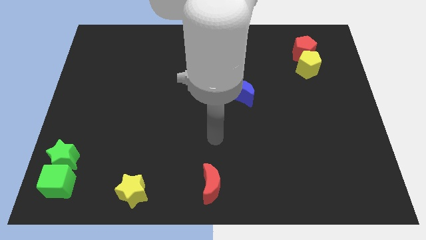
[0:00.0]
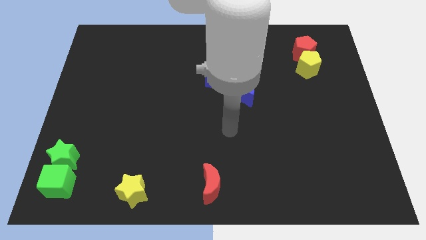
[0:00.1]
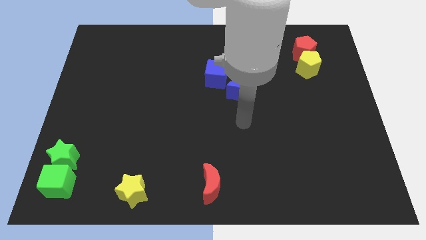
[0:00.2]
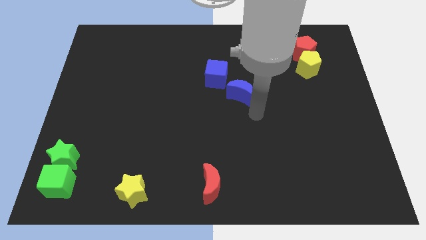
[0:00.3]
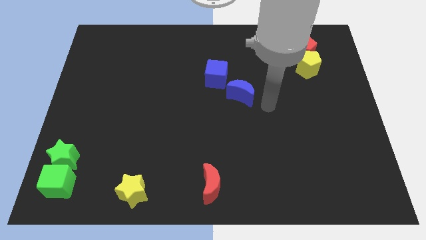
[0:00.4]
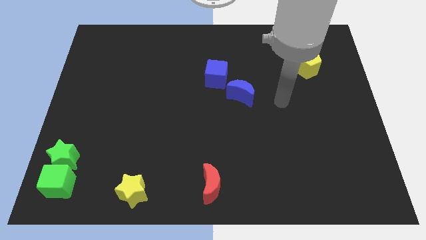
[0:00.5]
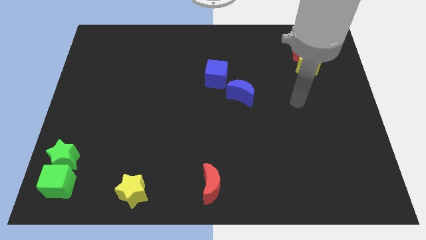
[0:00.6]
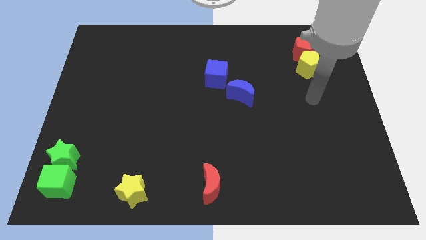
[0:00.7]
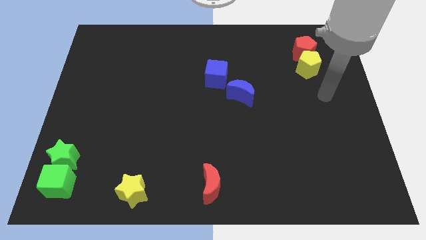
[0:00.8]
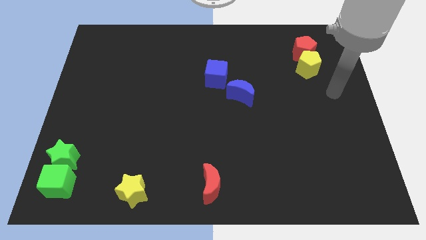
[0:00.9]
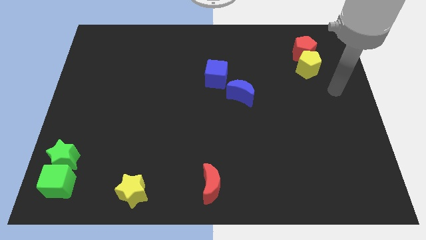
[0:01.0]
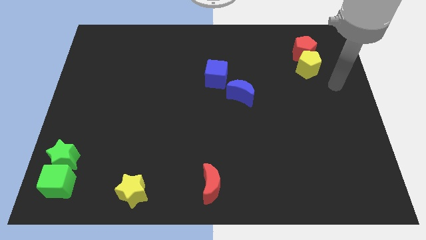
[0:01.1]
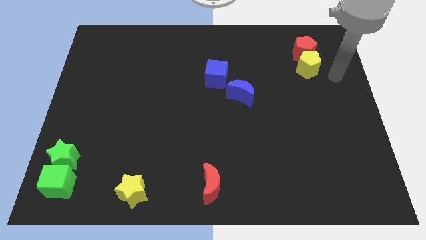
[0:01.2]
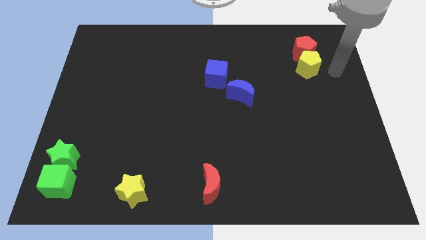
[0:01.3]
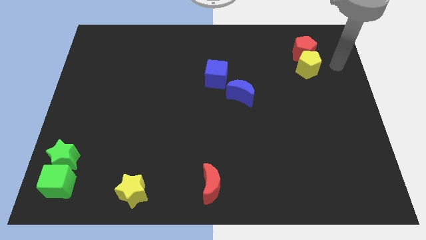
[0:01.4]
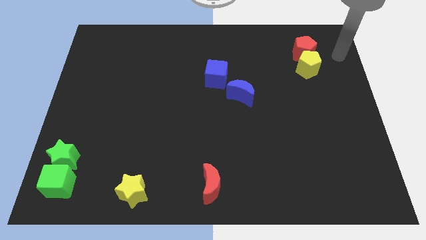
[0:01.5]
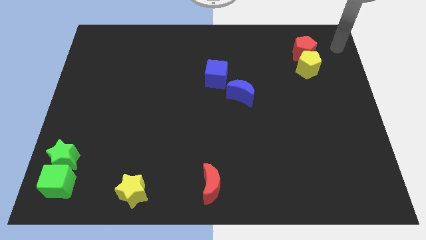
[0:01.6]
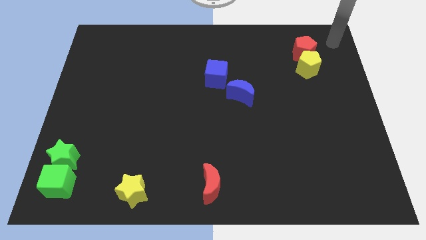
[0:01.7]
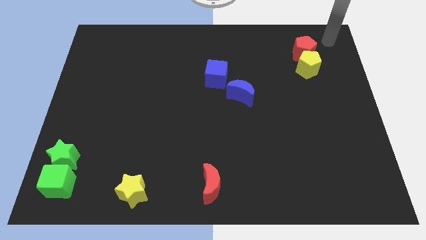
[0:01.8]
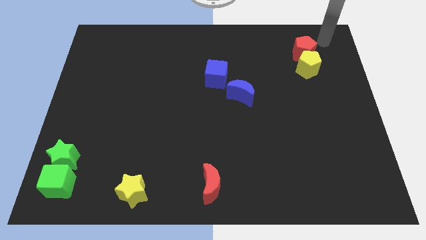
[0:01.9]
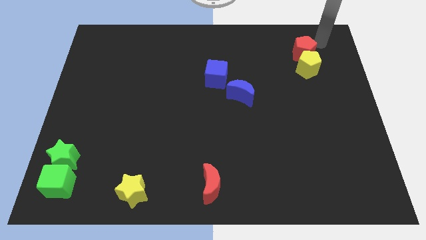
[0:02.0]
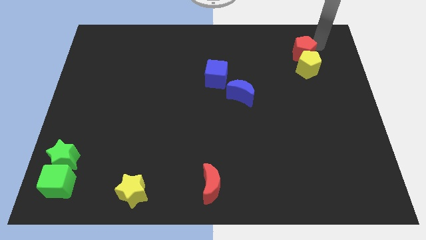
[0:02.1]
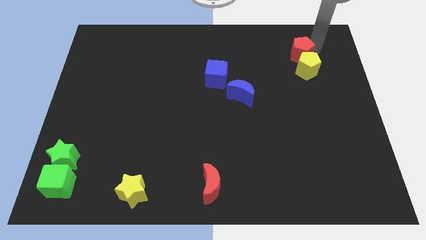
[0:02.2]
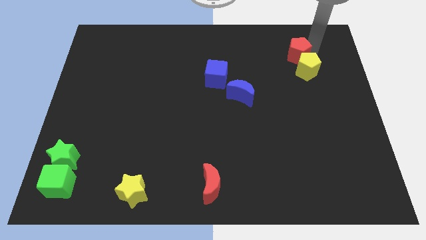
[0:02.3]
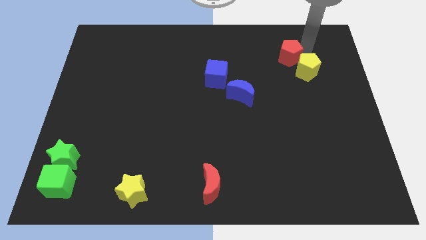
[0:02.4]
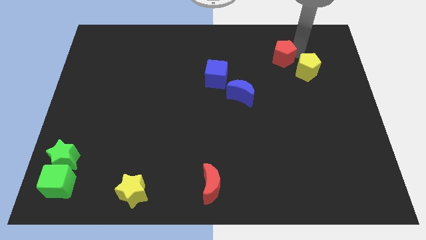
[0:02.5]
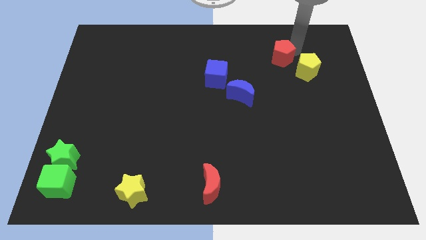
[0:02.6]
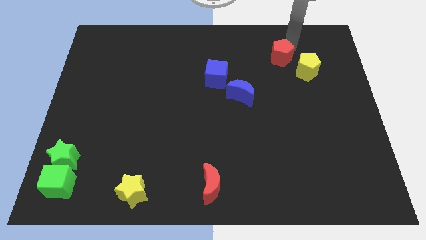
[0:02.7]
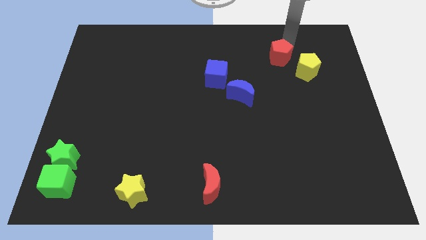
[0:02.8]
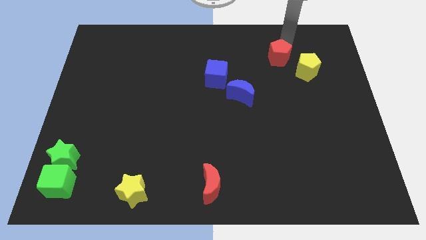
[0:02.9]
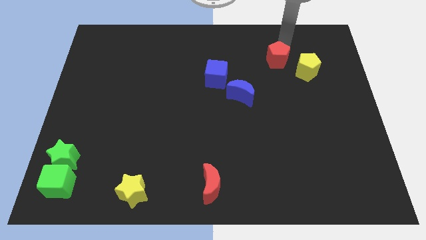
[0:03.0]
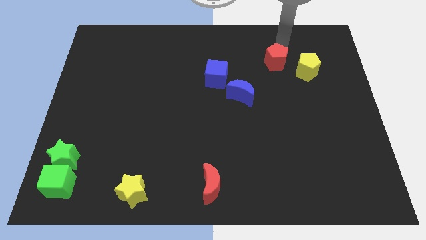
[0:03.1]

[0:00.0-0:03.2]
separate the red pentagon from yellow pentagon

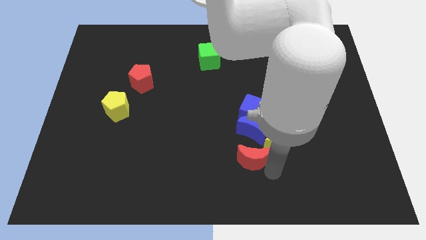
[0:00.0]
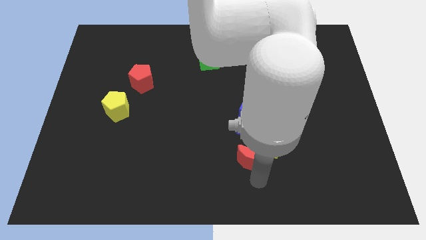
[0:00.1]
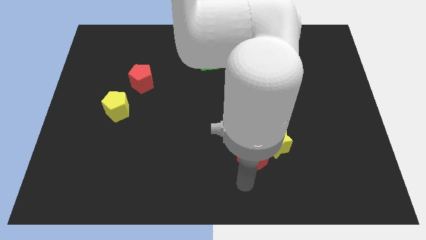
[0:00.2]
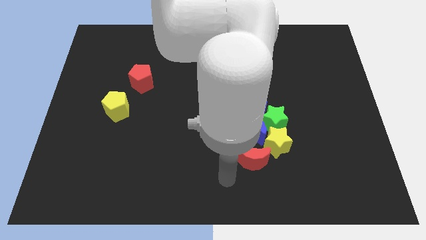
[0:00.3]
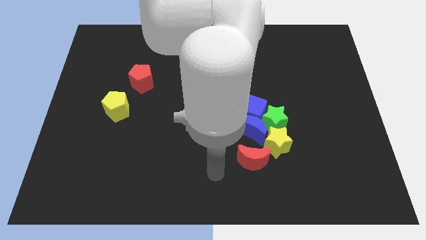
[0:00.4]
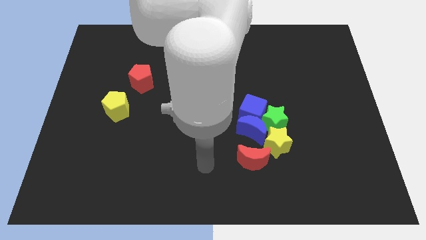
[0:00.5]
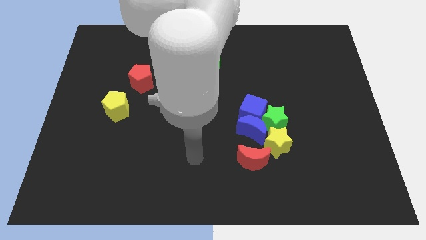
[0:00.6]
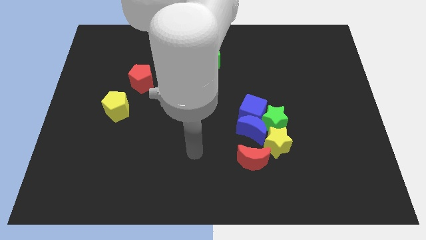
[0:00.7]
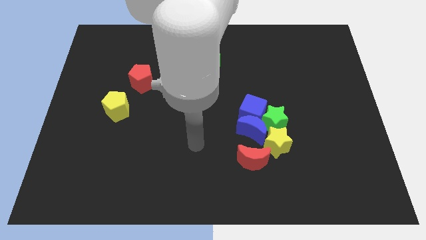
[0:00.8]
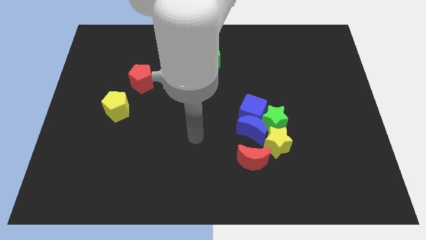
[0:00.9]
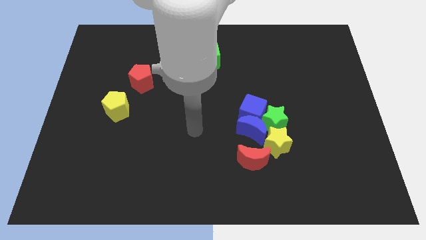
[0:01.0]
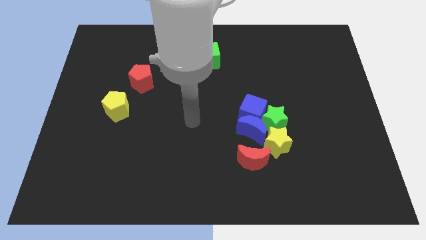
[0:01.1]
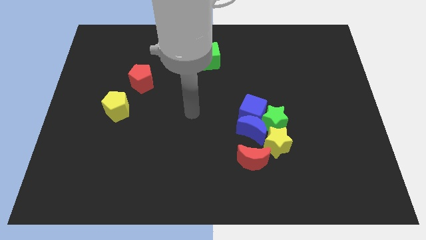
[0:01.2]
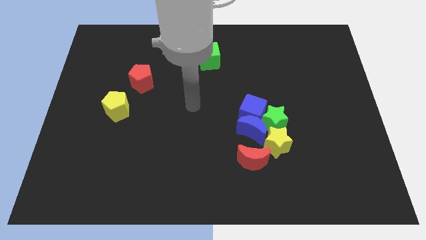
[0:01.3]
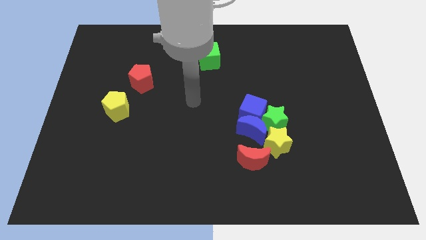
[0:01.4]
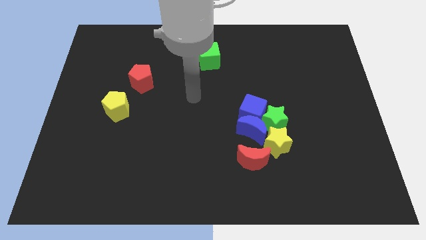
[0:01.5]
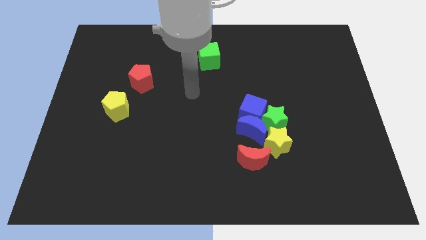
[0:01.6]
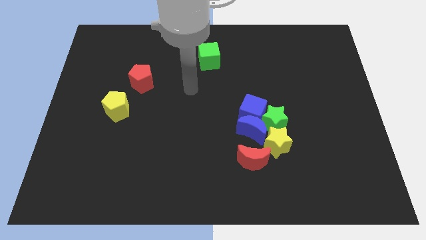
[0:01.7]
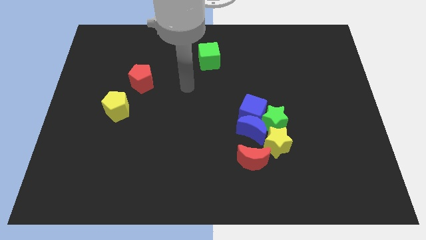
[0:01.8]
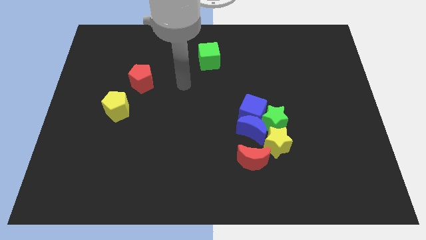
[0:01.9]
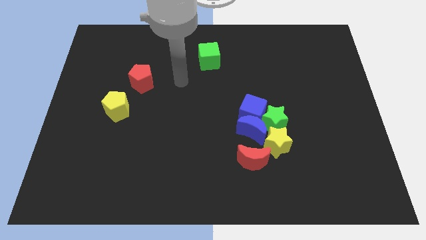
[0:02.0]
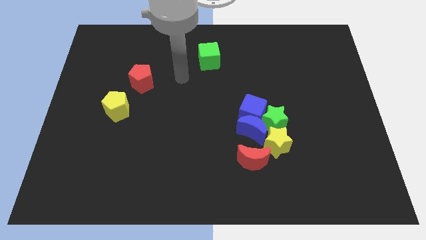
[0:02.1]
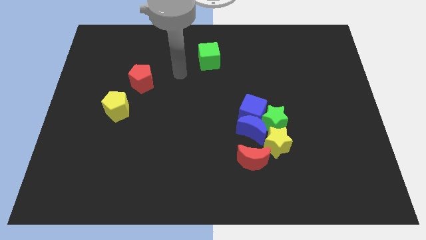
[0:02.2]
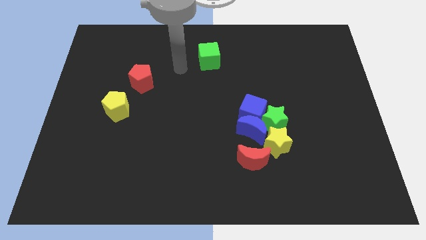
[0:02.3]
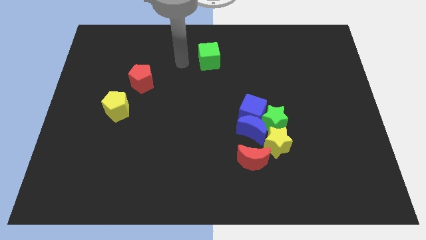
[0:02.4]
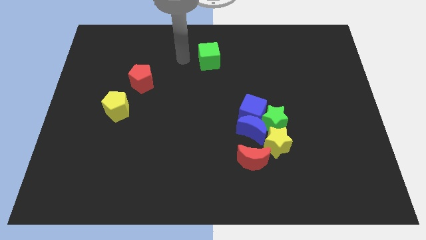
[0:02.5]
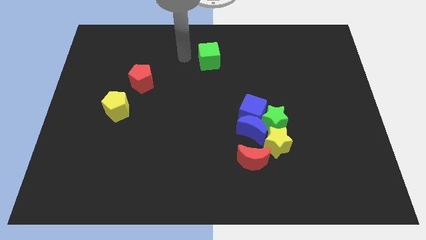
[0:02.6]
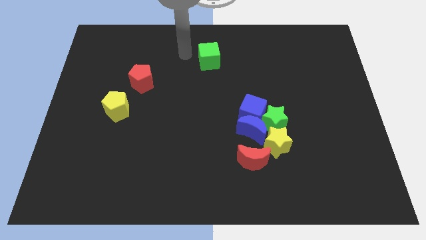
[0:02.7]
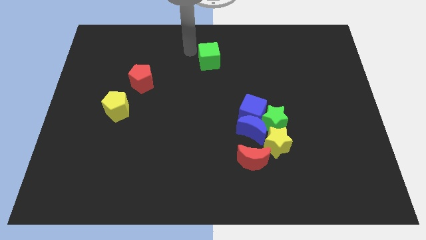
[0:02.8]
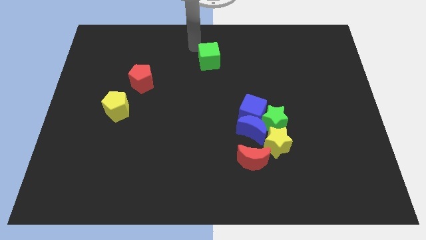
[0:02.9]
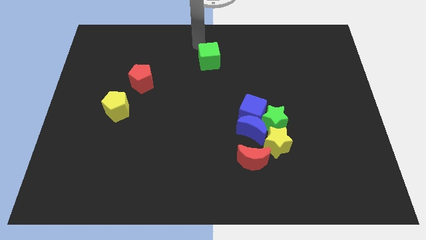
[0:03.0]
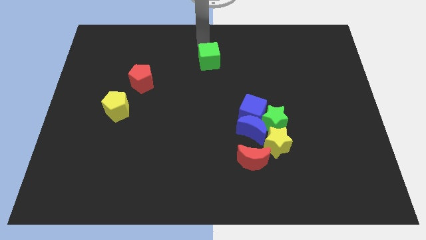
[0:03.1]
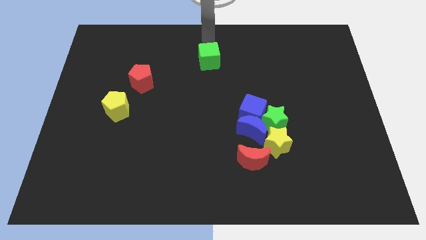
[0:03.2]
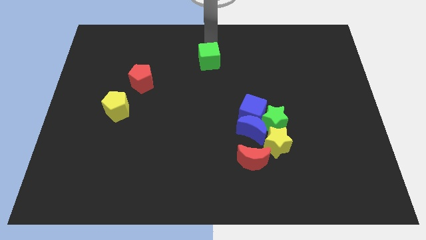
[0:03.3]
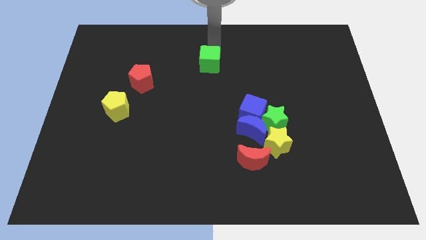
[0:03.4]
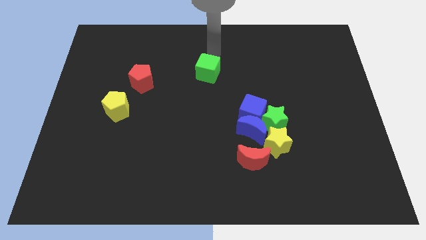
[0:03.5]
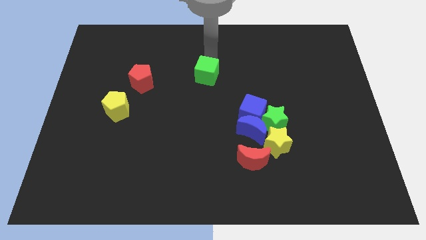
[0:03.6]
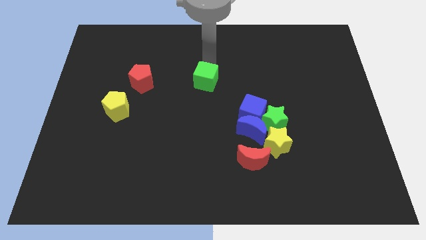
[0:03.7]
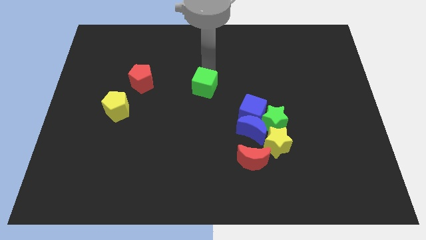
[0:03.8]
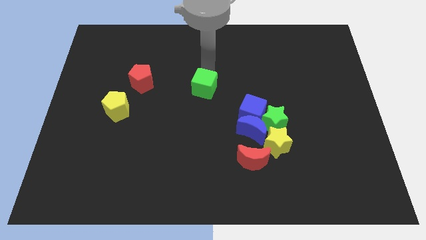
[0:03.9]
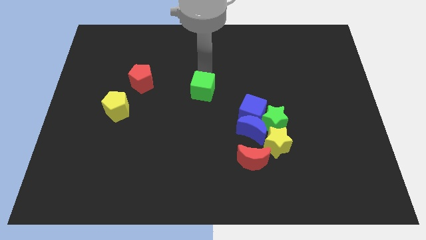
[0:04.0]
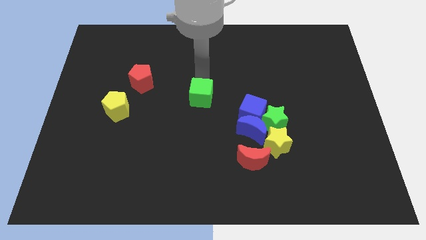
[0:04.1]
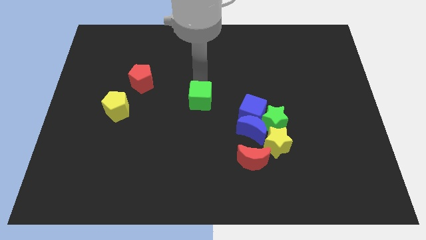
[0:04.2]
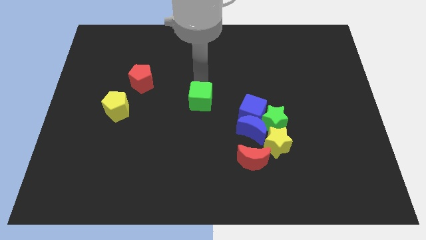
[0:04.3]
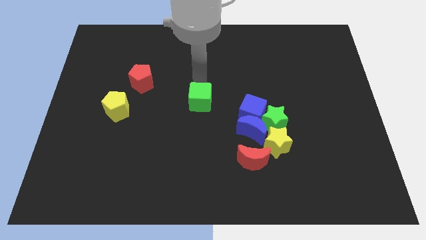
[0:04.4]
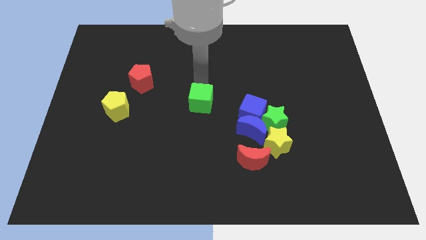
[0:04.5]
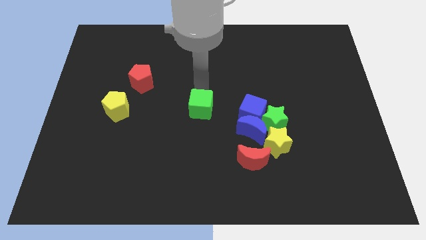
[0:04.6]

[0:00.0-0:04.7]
move the green cube slightly down

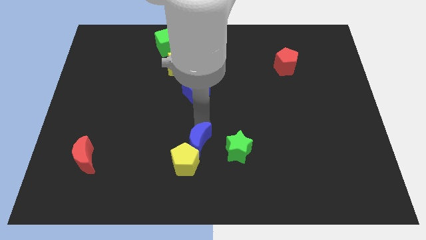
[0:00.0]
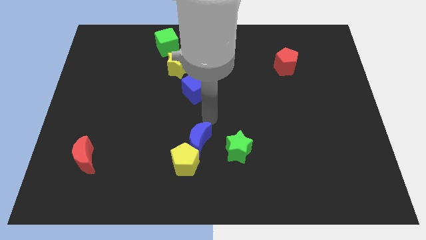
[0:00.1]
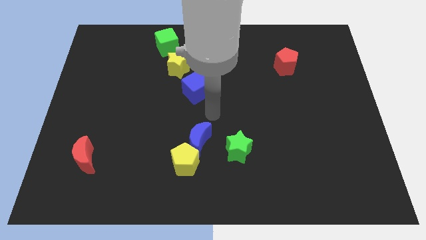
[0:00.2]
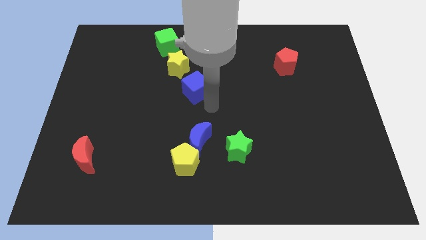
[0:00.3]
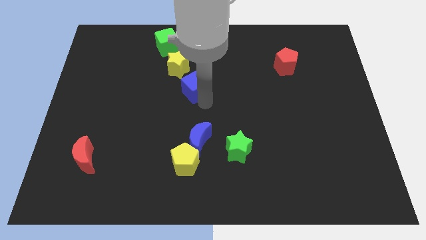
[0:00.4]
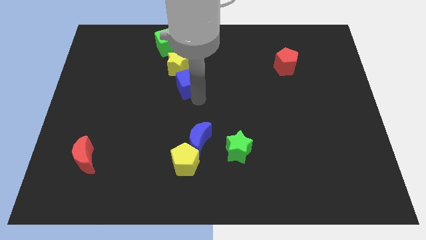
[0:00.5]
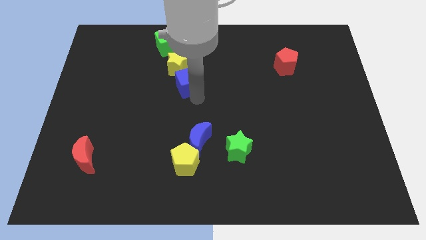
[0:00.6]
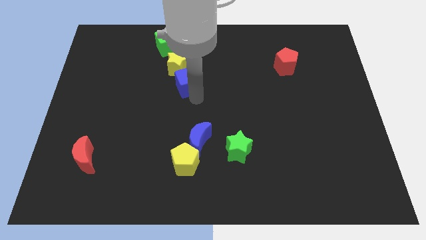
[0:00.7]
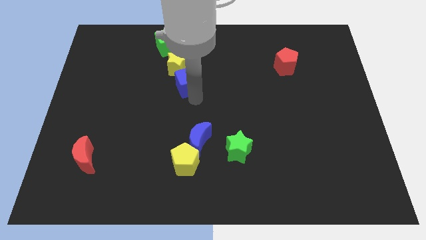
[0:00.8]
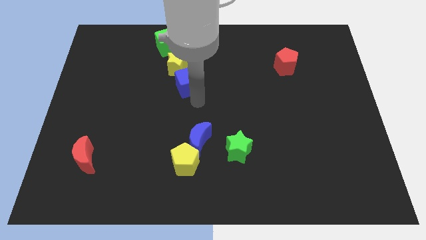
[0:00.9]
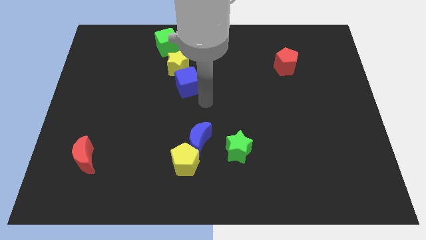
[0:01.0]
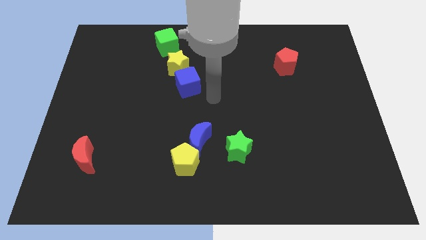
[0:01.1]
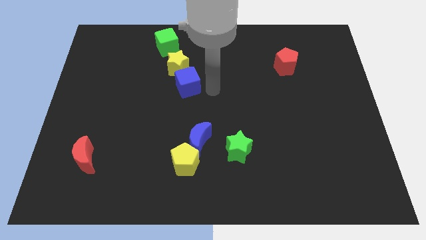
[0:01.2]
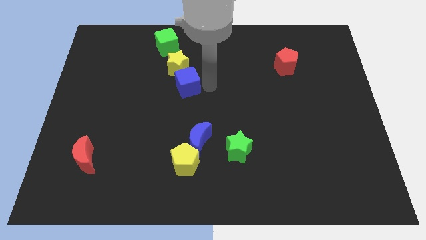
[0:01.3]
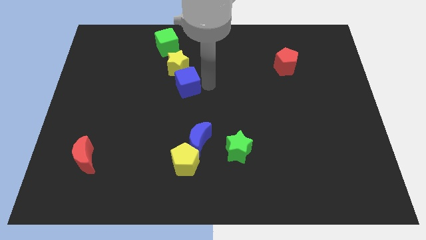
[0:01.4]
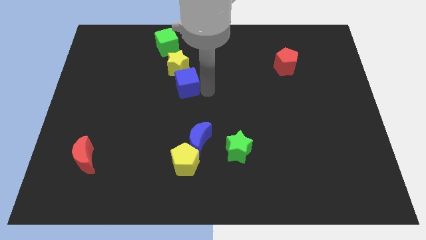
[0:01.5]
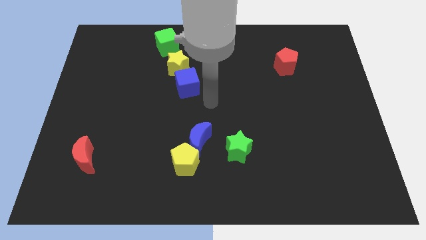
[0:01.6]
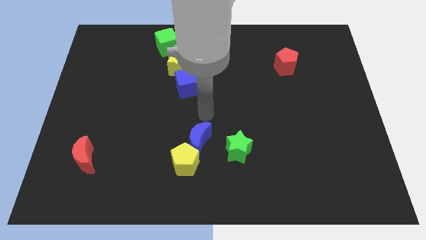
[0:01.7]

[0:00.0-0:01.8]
push the blue cube slightly to the top
